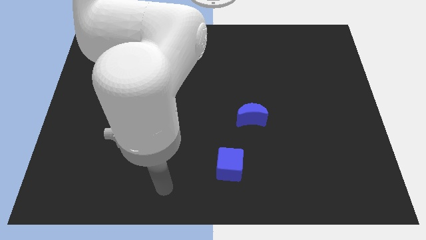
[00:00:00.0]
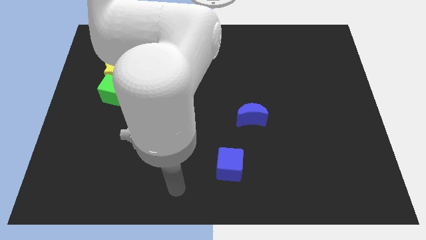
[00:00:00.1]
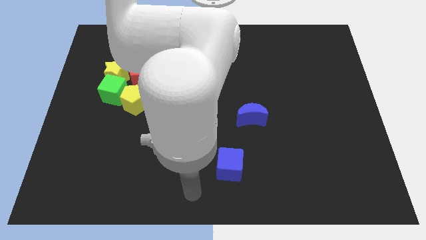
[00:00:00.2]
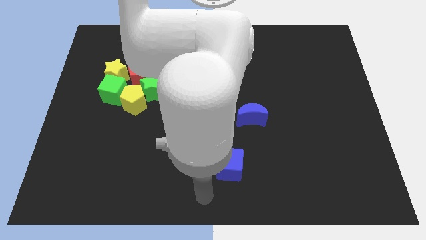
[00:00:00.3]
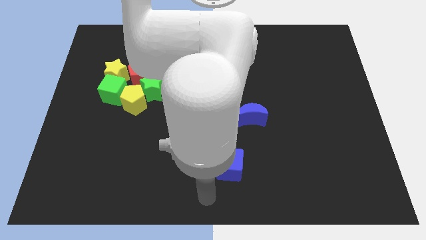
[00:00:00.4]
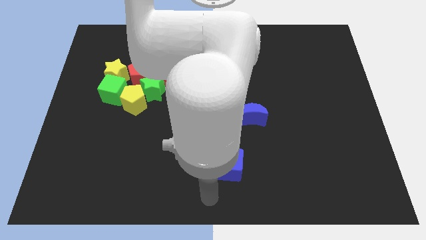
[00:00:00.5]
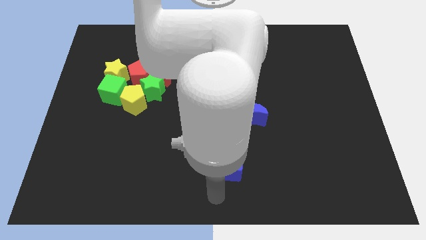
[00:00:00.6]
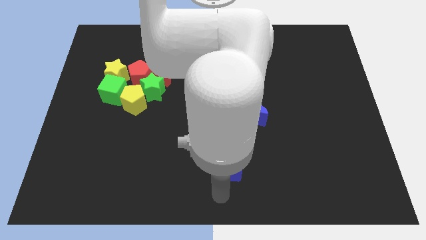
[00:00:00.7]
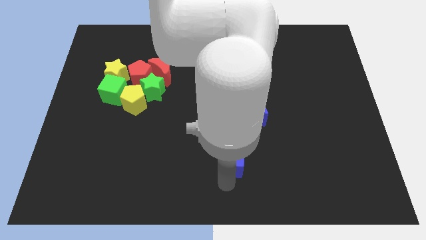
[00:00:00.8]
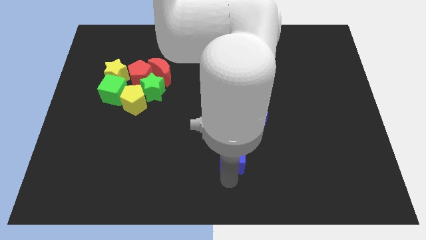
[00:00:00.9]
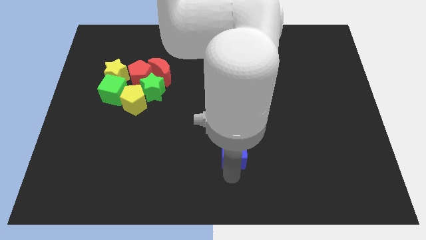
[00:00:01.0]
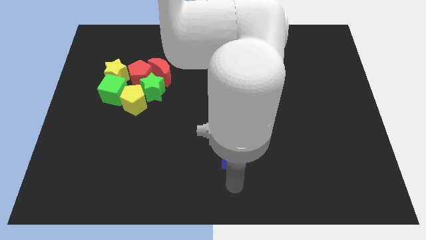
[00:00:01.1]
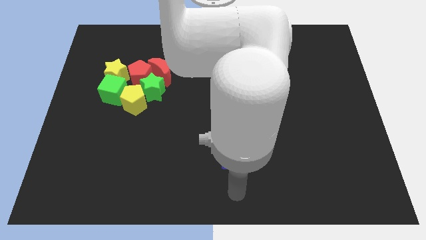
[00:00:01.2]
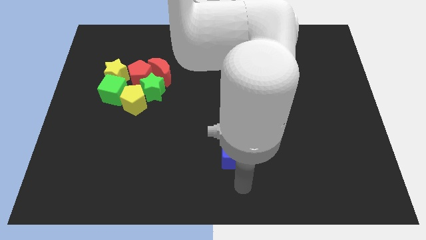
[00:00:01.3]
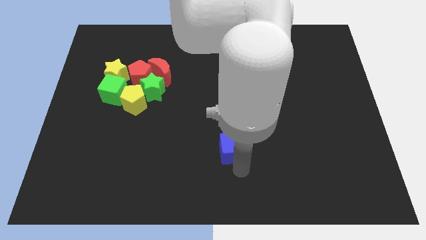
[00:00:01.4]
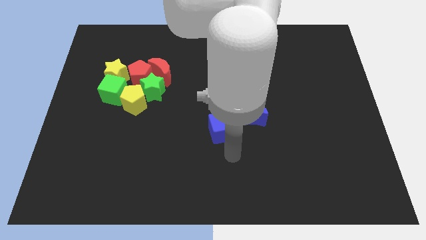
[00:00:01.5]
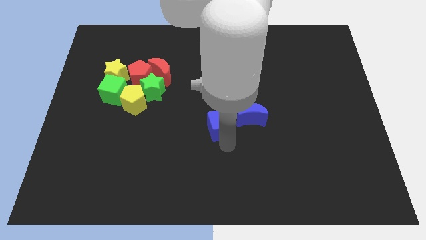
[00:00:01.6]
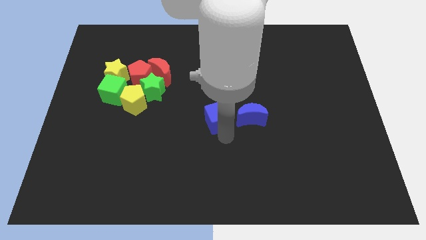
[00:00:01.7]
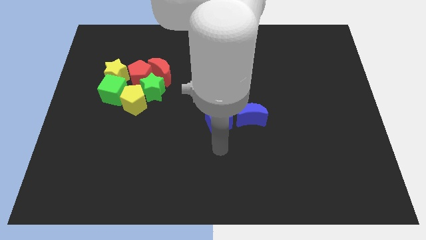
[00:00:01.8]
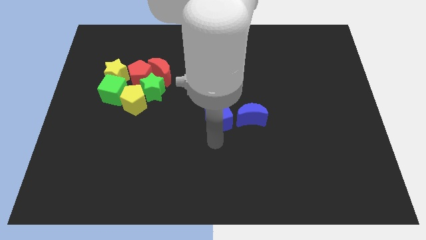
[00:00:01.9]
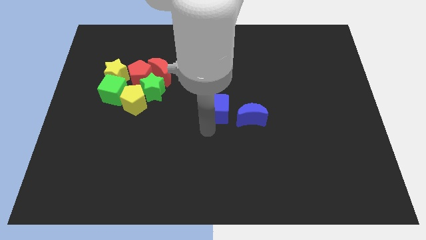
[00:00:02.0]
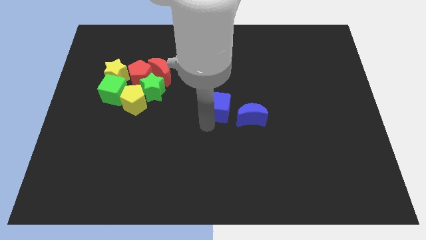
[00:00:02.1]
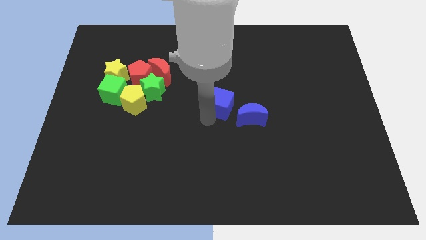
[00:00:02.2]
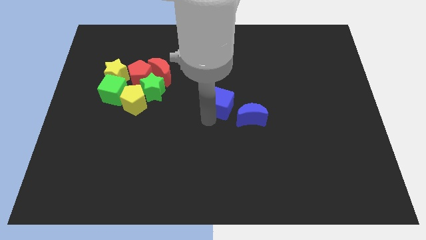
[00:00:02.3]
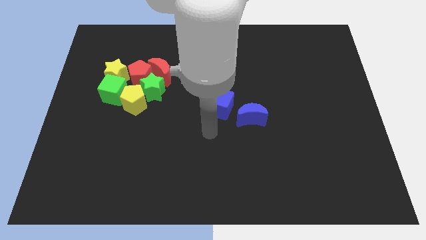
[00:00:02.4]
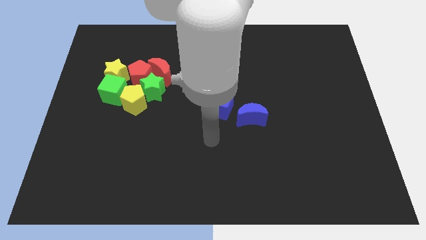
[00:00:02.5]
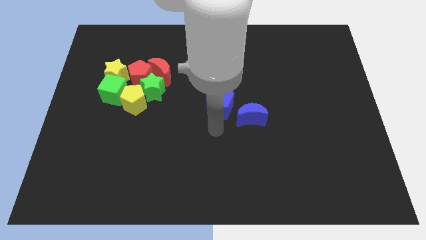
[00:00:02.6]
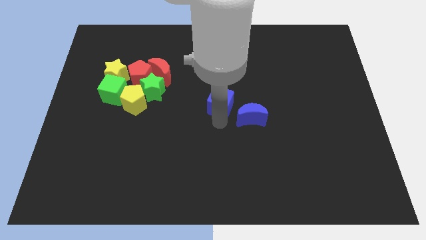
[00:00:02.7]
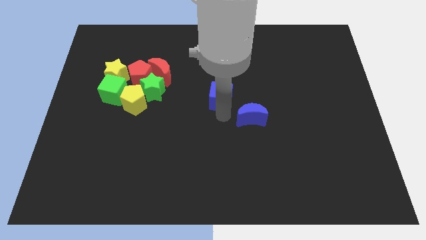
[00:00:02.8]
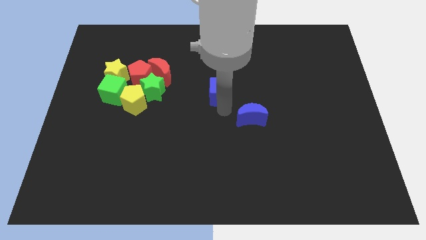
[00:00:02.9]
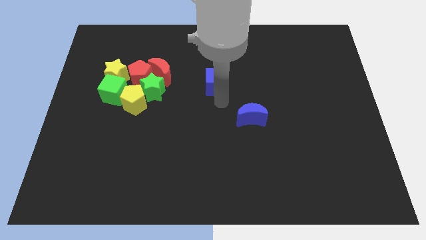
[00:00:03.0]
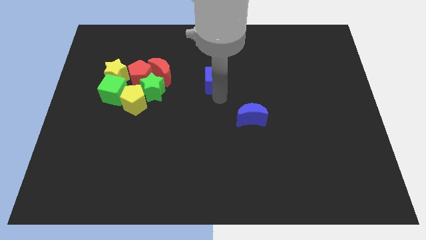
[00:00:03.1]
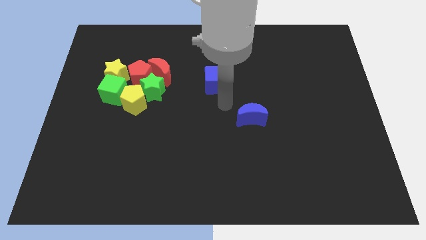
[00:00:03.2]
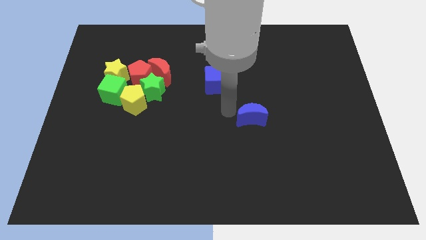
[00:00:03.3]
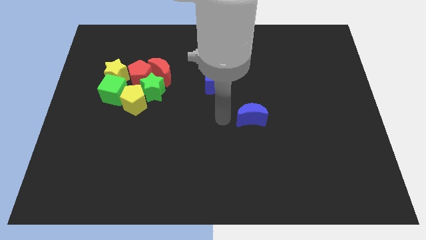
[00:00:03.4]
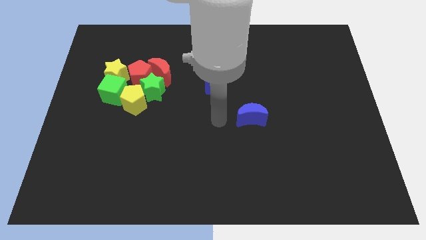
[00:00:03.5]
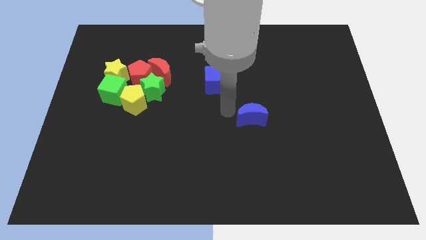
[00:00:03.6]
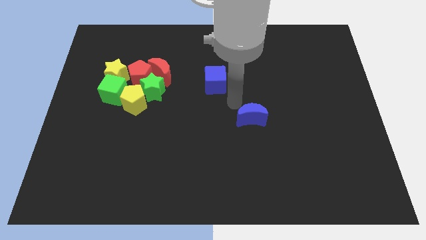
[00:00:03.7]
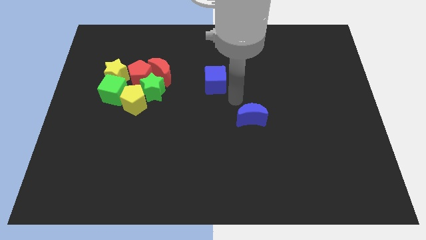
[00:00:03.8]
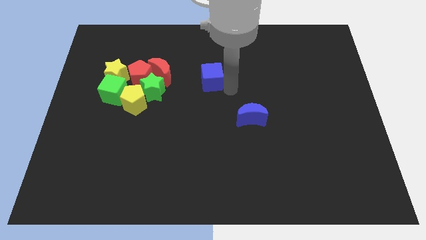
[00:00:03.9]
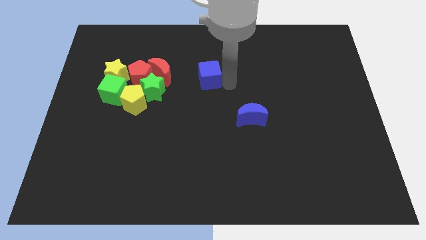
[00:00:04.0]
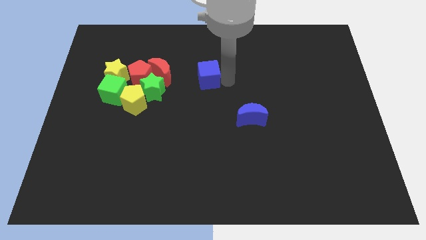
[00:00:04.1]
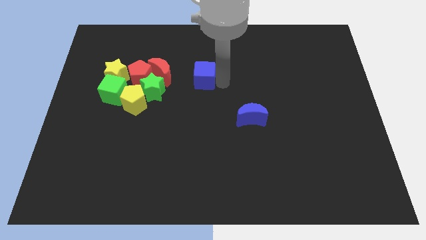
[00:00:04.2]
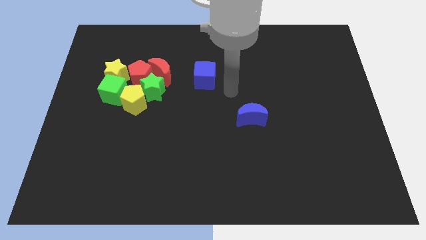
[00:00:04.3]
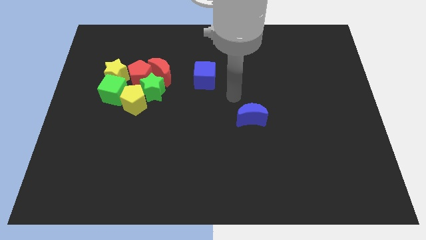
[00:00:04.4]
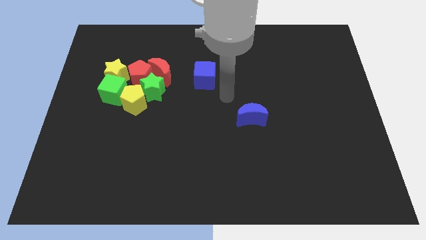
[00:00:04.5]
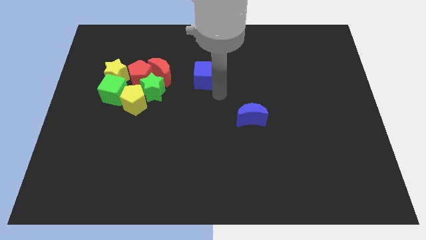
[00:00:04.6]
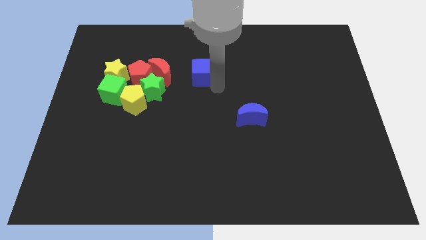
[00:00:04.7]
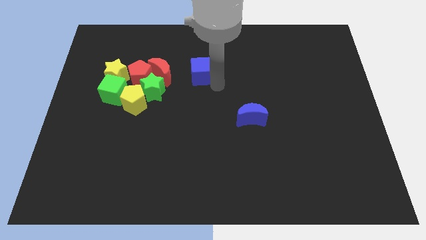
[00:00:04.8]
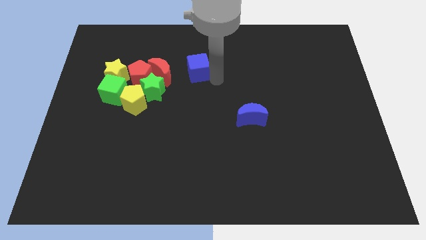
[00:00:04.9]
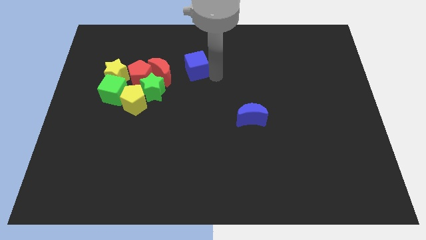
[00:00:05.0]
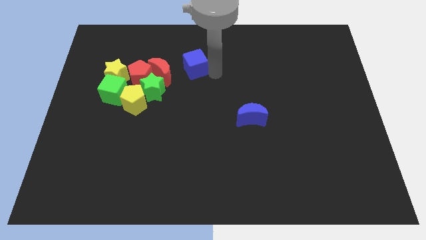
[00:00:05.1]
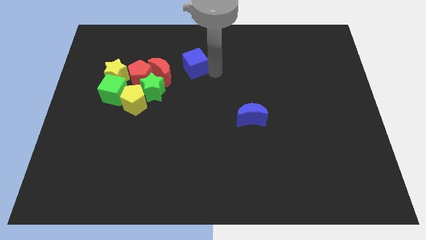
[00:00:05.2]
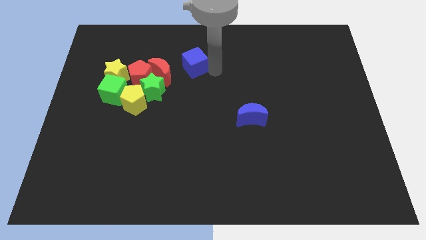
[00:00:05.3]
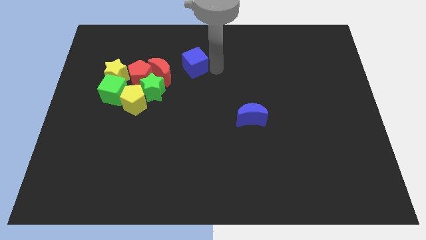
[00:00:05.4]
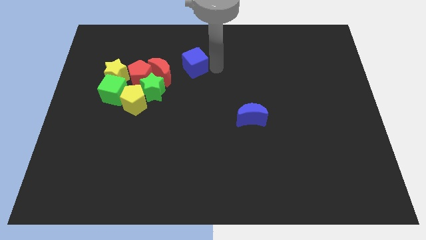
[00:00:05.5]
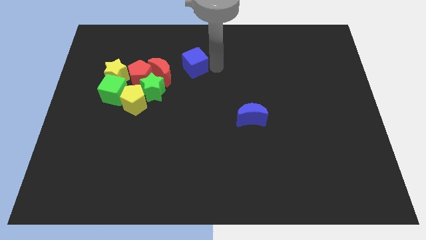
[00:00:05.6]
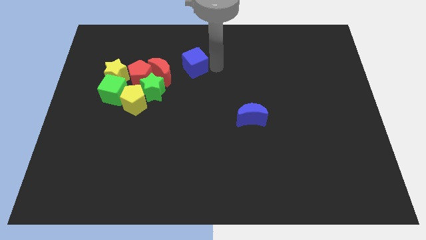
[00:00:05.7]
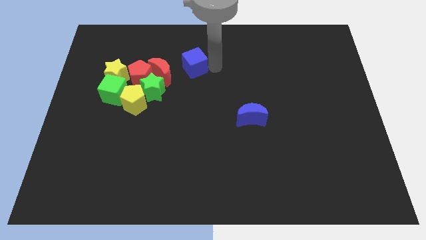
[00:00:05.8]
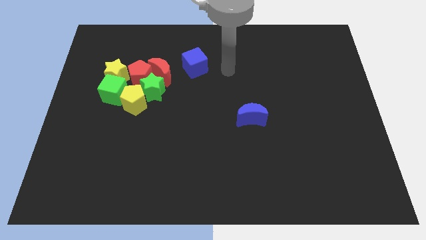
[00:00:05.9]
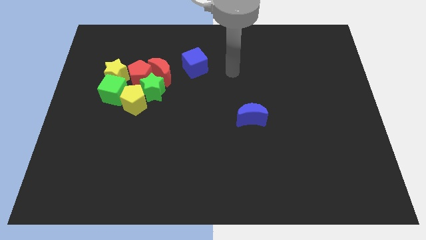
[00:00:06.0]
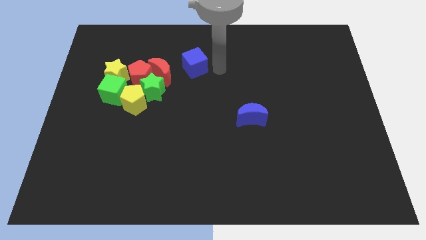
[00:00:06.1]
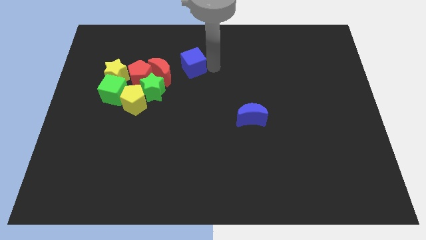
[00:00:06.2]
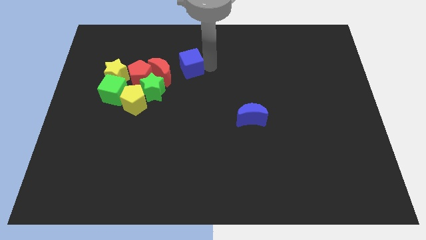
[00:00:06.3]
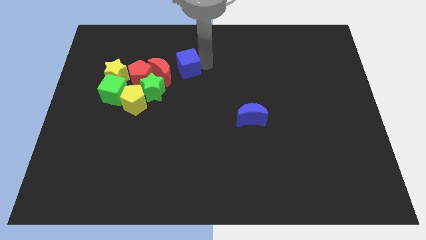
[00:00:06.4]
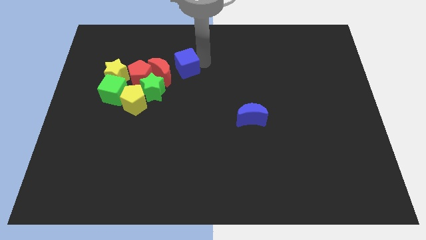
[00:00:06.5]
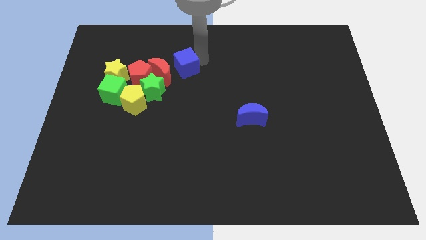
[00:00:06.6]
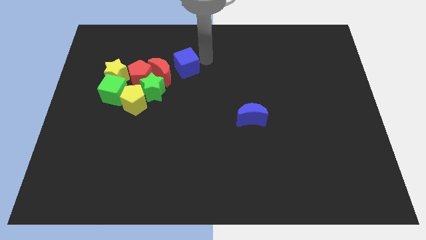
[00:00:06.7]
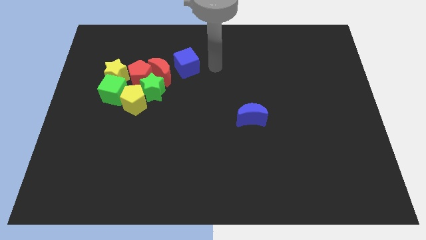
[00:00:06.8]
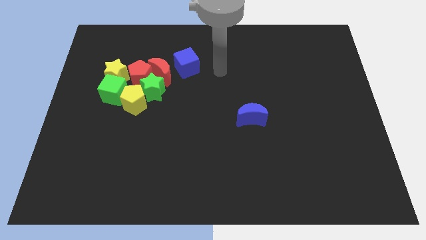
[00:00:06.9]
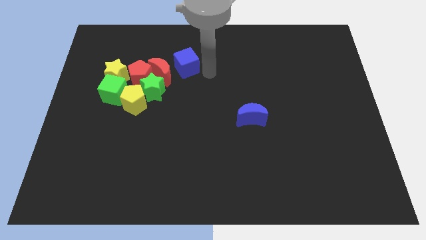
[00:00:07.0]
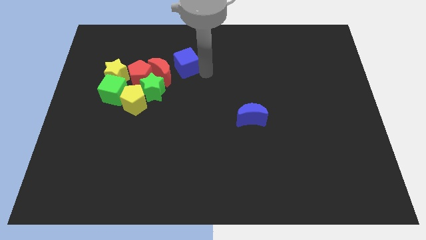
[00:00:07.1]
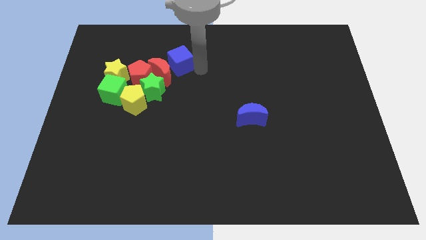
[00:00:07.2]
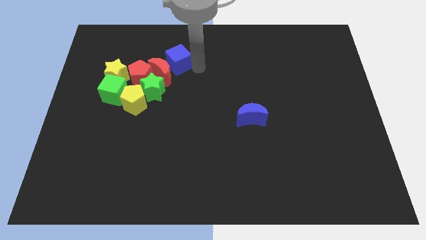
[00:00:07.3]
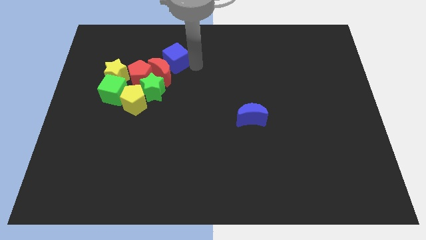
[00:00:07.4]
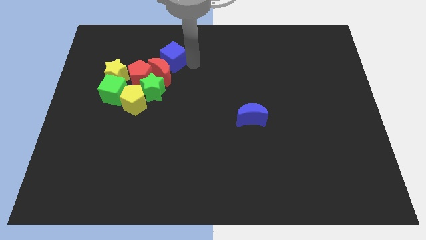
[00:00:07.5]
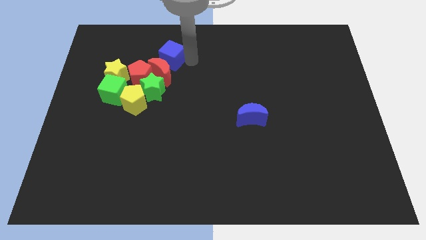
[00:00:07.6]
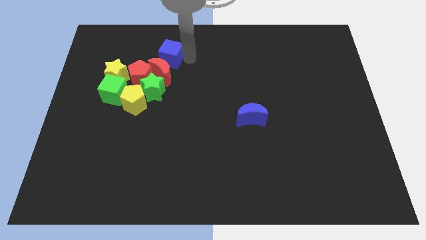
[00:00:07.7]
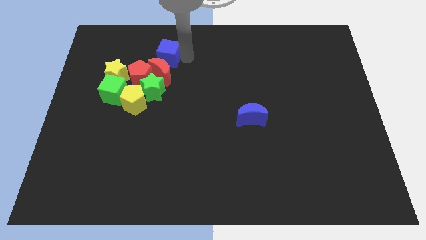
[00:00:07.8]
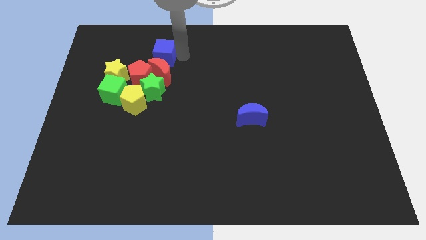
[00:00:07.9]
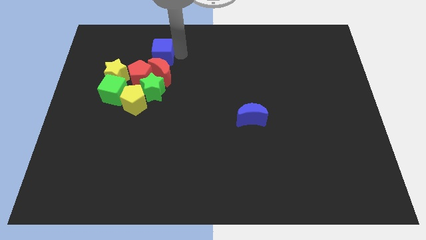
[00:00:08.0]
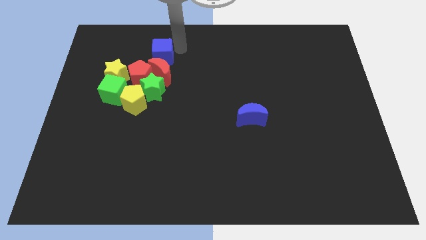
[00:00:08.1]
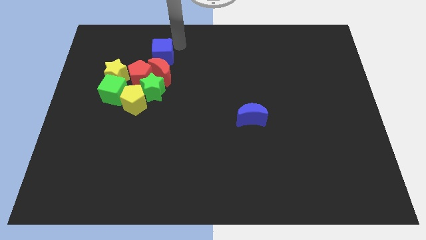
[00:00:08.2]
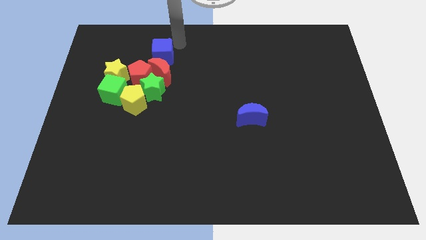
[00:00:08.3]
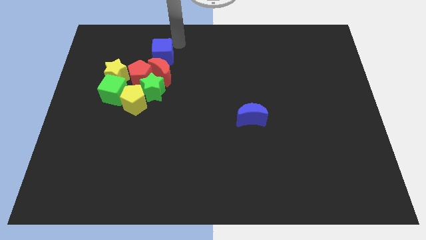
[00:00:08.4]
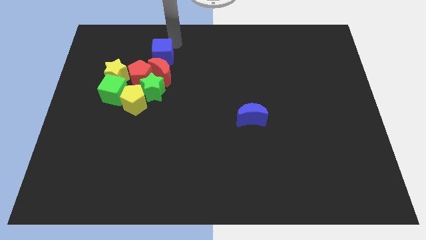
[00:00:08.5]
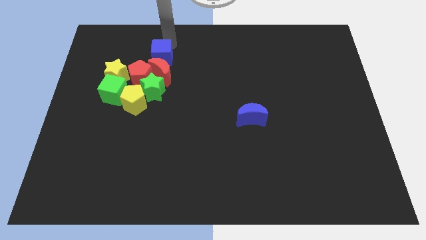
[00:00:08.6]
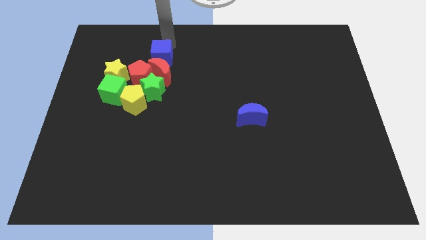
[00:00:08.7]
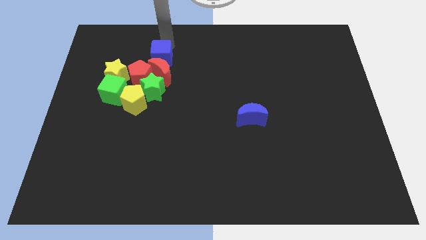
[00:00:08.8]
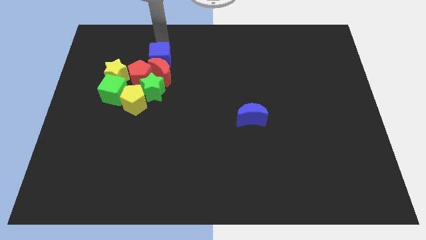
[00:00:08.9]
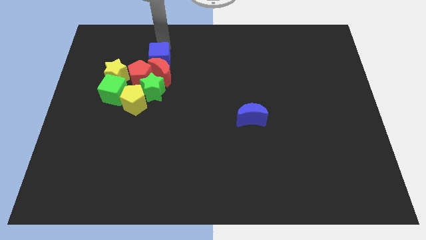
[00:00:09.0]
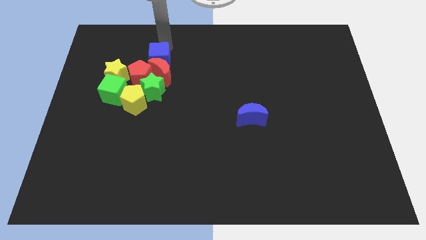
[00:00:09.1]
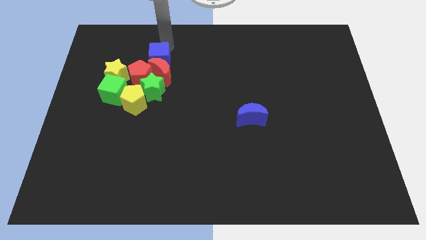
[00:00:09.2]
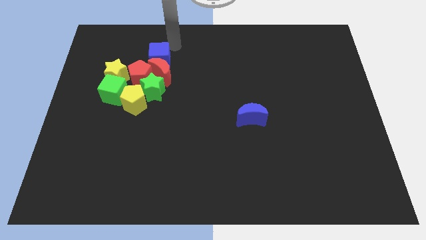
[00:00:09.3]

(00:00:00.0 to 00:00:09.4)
push the blue cube to the top of the red crescent
